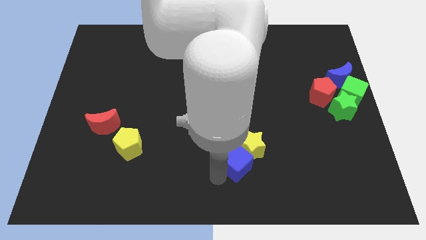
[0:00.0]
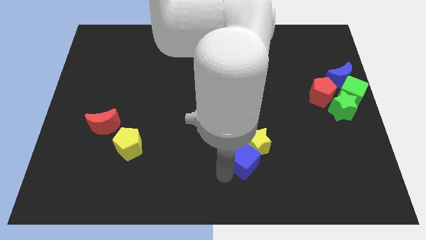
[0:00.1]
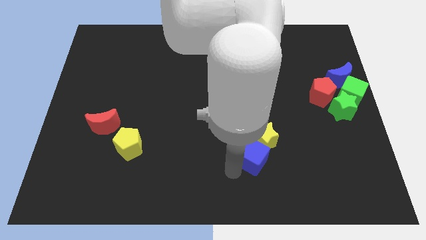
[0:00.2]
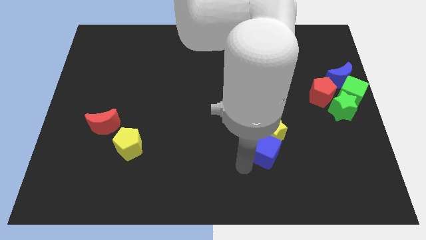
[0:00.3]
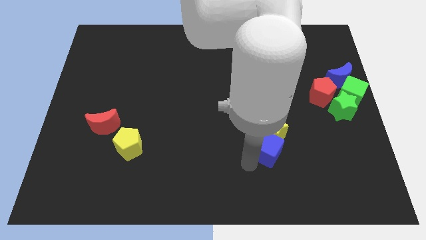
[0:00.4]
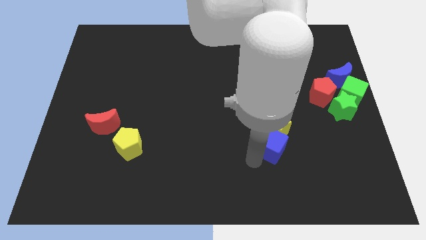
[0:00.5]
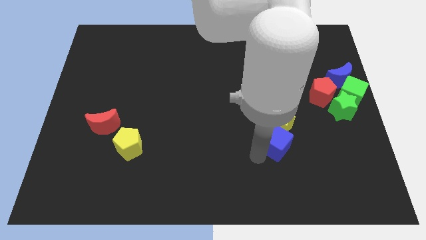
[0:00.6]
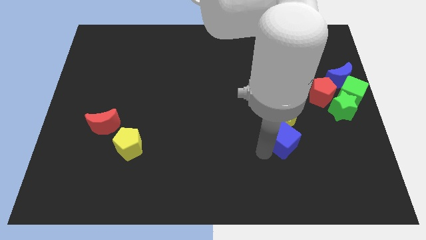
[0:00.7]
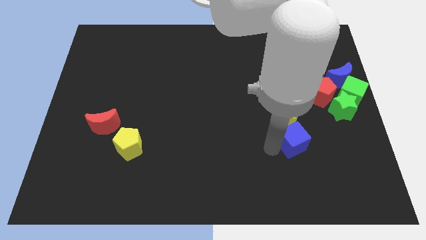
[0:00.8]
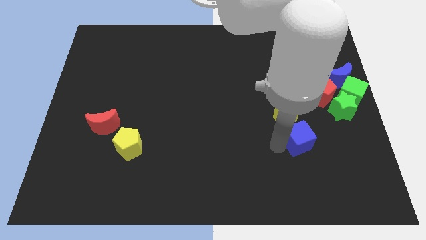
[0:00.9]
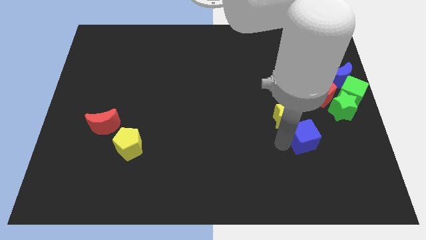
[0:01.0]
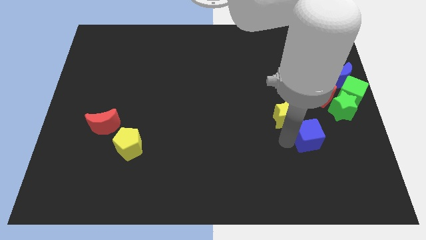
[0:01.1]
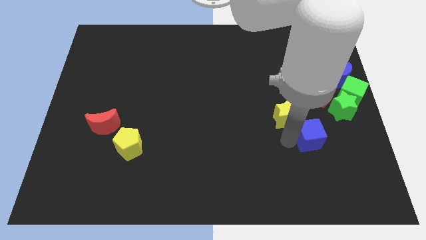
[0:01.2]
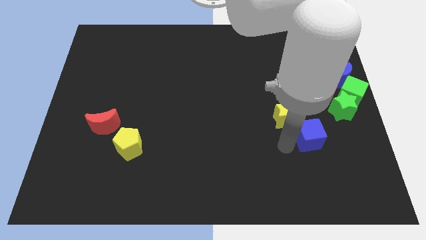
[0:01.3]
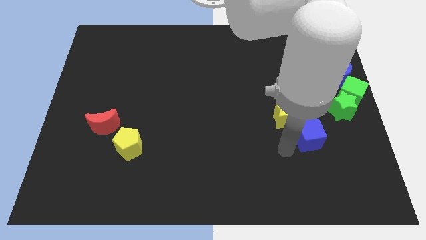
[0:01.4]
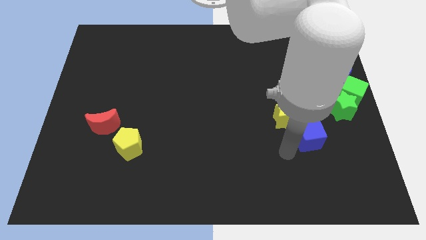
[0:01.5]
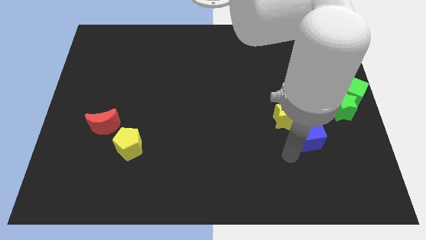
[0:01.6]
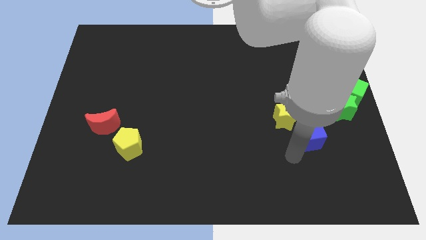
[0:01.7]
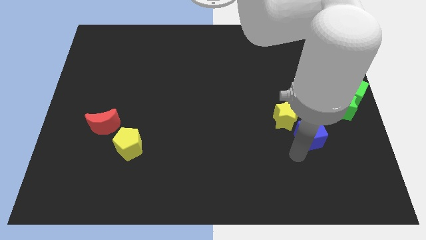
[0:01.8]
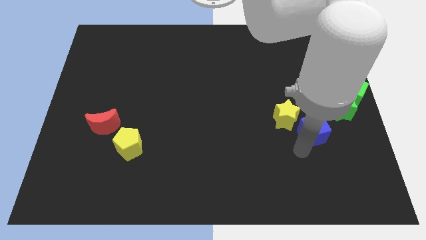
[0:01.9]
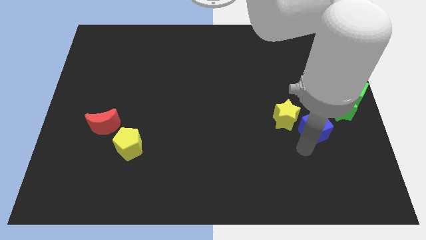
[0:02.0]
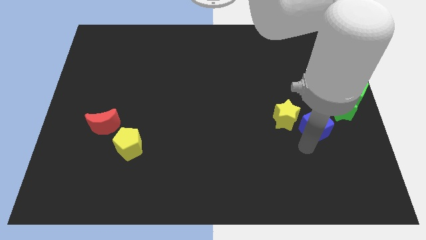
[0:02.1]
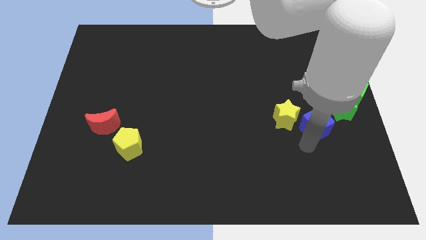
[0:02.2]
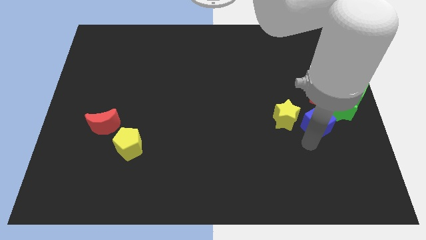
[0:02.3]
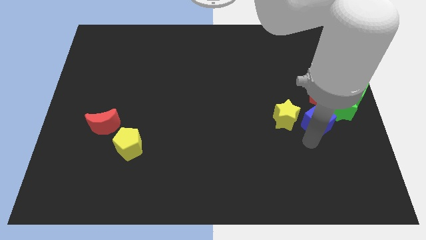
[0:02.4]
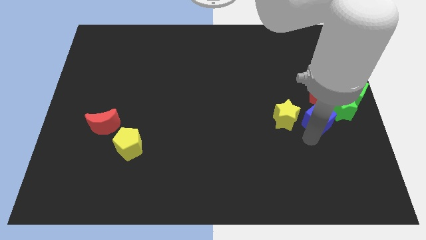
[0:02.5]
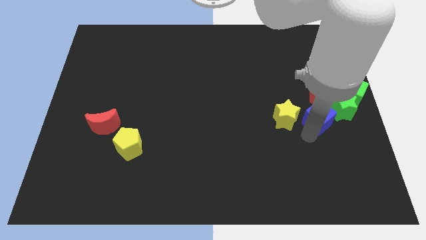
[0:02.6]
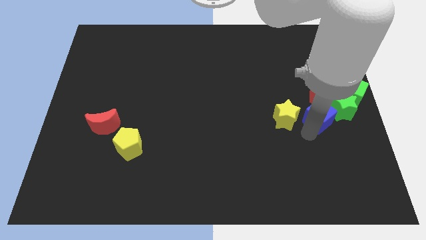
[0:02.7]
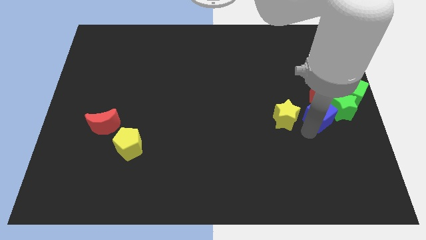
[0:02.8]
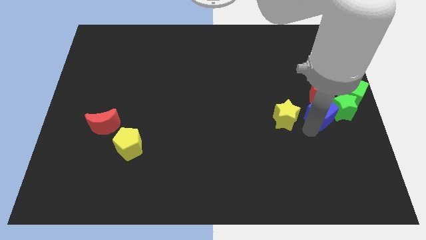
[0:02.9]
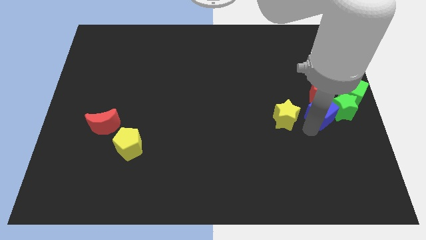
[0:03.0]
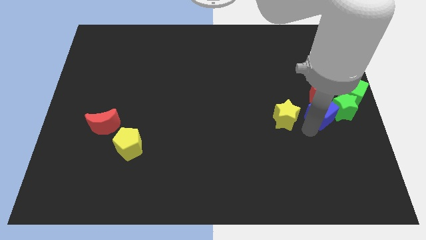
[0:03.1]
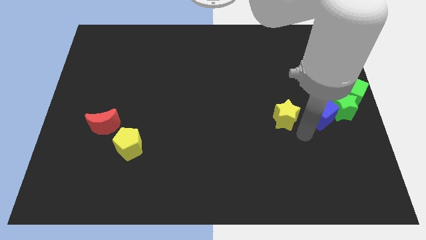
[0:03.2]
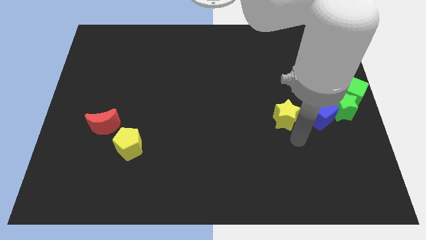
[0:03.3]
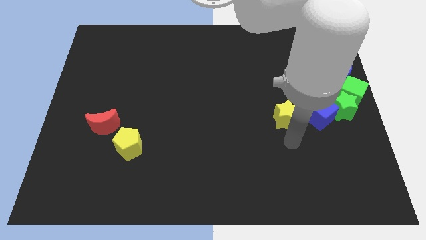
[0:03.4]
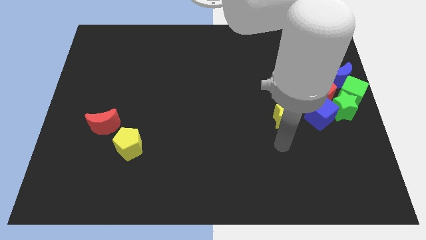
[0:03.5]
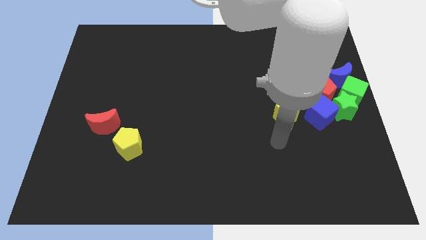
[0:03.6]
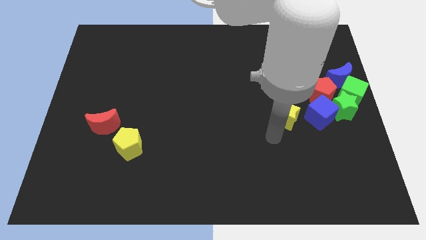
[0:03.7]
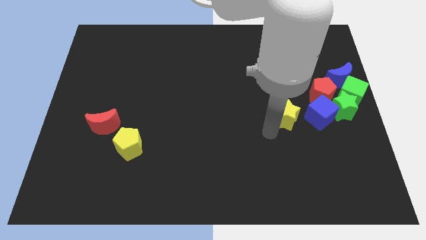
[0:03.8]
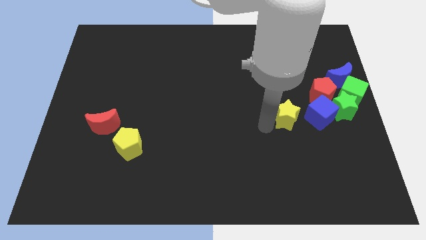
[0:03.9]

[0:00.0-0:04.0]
move the blue cube to the bottom of the green star

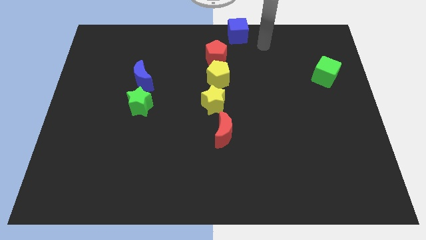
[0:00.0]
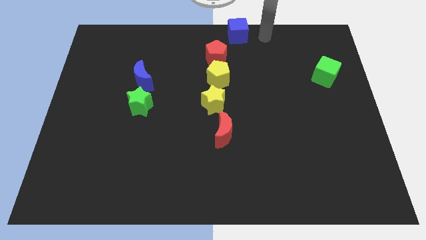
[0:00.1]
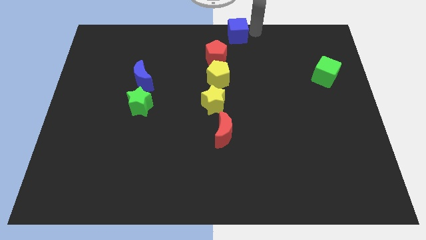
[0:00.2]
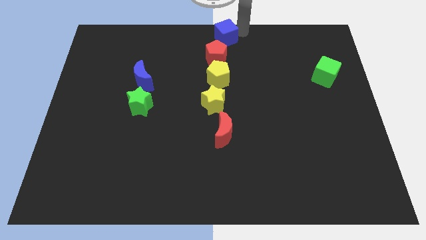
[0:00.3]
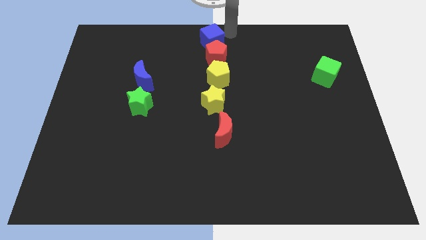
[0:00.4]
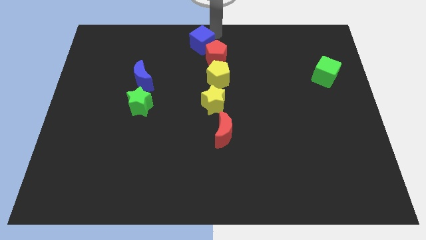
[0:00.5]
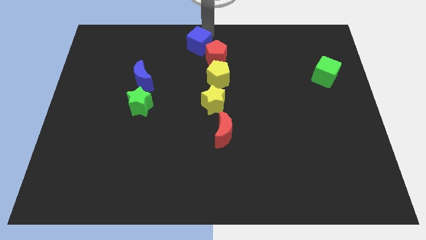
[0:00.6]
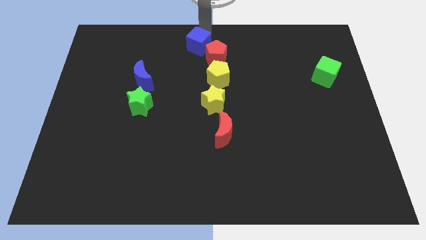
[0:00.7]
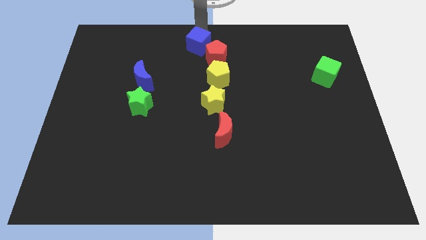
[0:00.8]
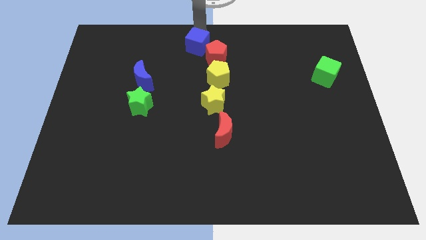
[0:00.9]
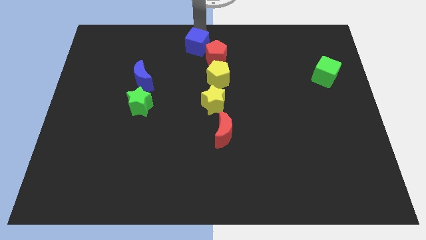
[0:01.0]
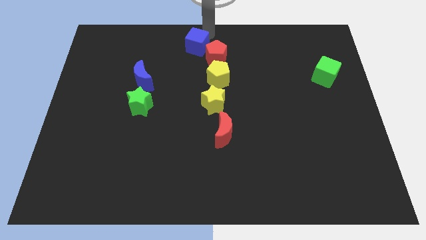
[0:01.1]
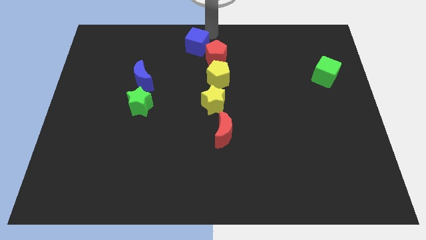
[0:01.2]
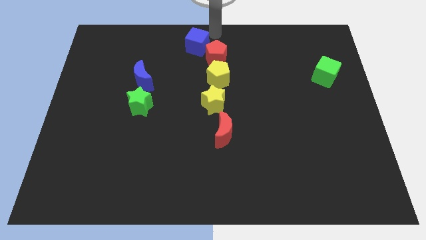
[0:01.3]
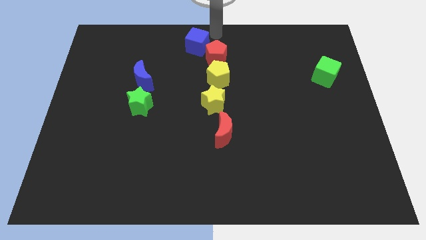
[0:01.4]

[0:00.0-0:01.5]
place blue cube top left to the red pentagon

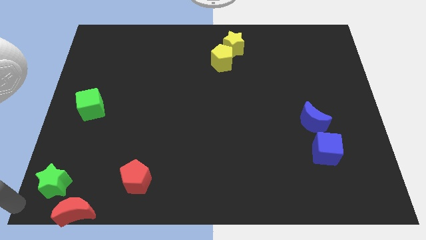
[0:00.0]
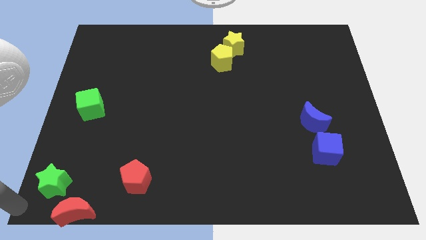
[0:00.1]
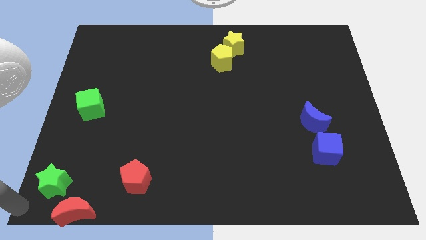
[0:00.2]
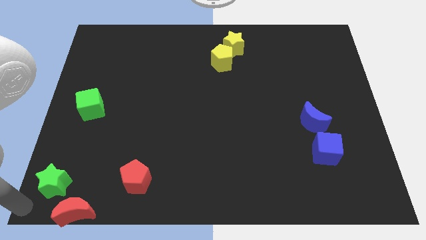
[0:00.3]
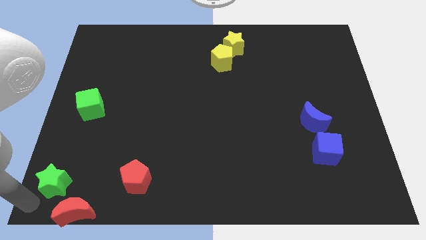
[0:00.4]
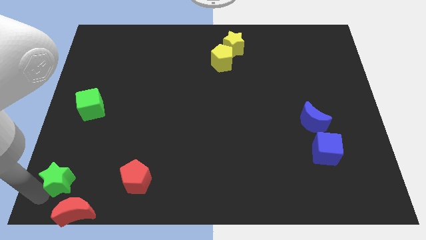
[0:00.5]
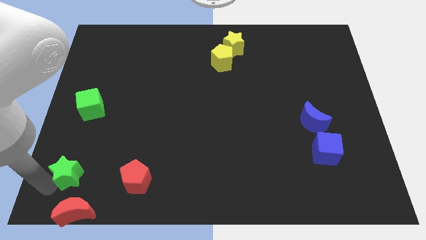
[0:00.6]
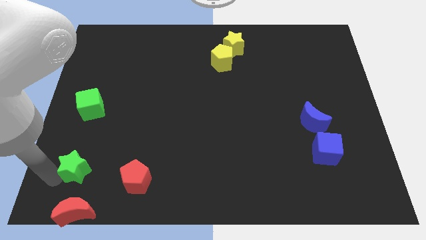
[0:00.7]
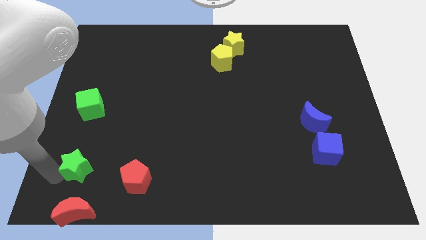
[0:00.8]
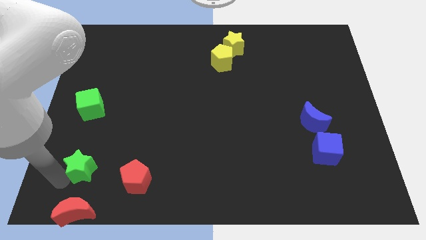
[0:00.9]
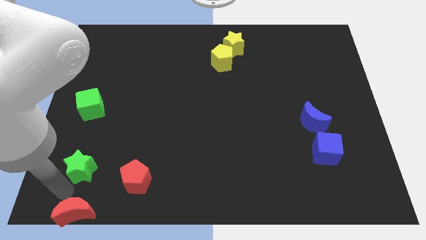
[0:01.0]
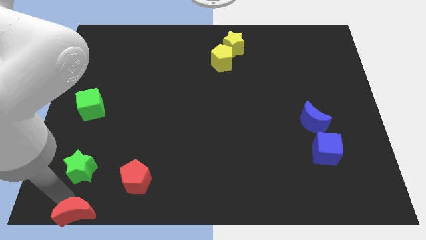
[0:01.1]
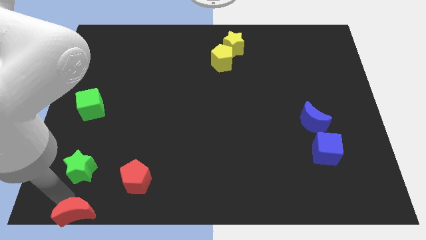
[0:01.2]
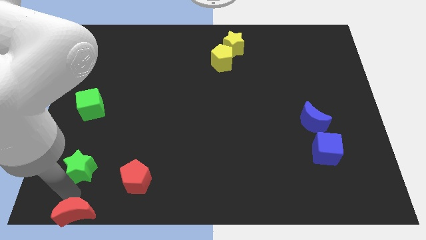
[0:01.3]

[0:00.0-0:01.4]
move the green star to the top of the red crescent

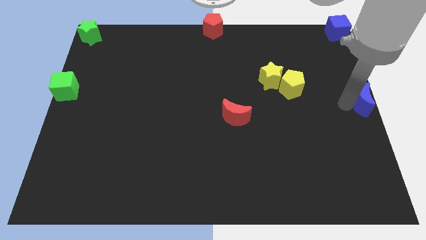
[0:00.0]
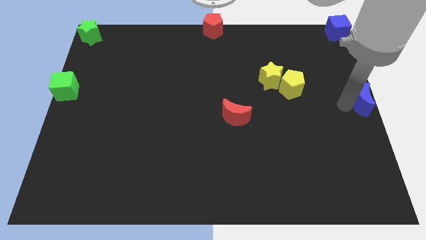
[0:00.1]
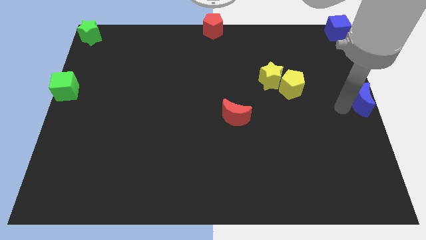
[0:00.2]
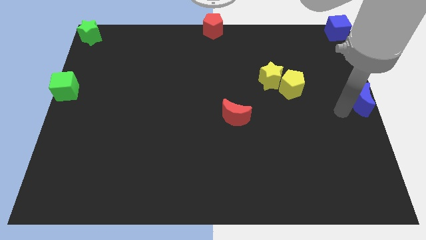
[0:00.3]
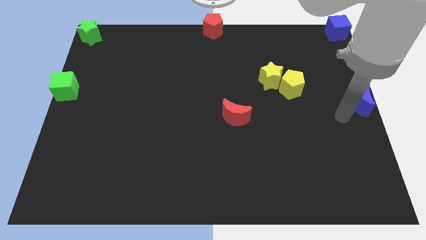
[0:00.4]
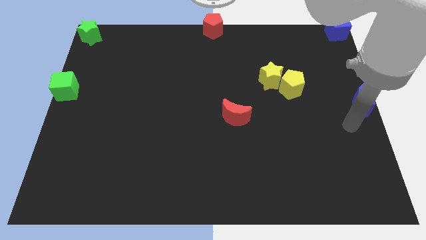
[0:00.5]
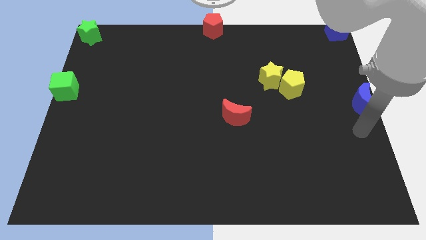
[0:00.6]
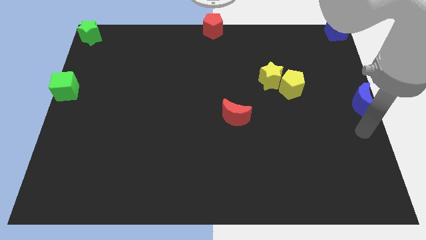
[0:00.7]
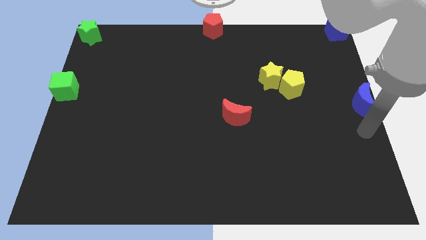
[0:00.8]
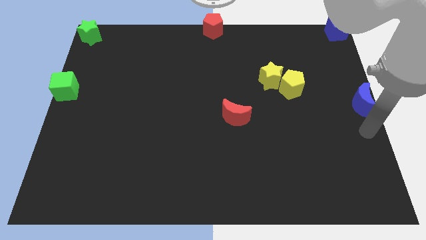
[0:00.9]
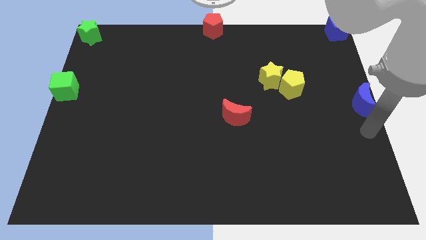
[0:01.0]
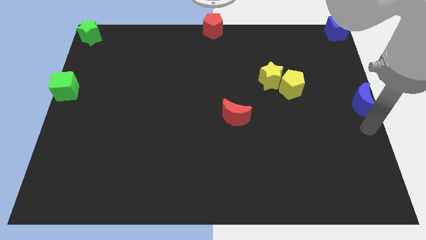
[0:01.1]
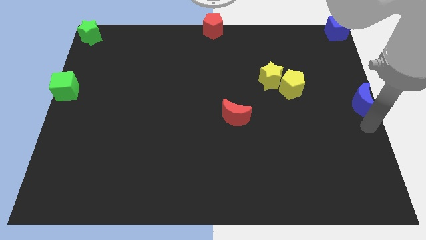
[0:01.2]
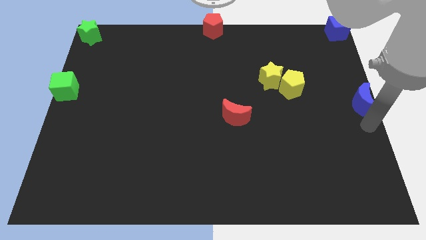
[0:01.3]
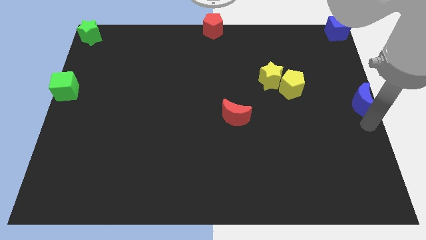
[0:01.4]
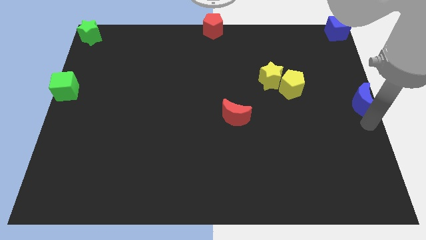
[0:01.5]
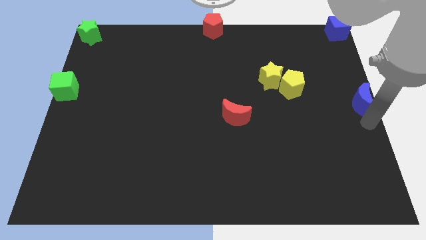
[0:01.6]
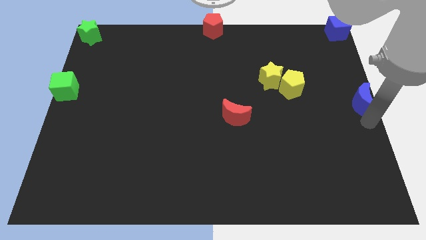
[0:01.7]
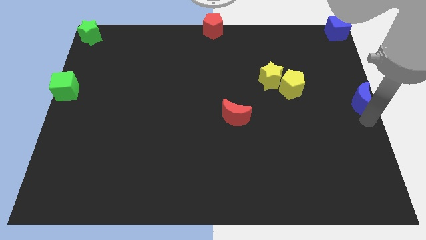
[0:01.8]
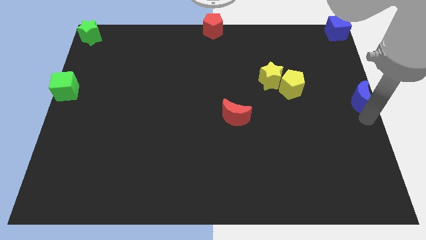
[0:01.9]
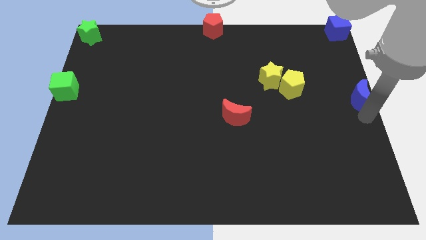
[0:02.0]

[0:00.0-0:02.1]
place the arm on the down side of the blue moon
